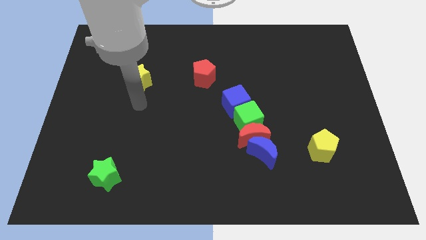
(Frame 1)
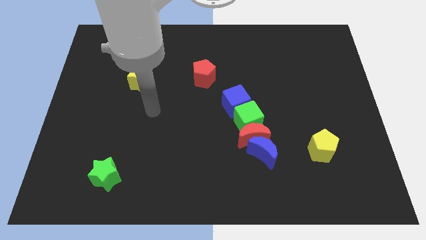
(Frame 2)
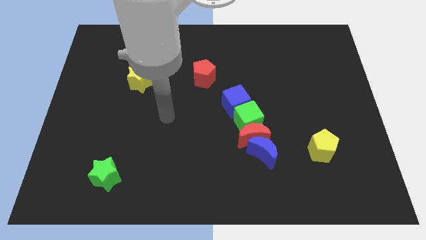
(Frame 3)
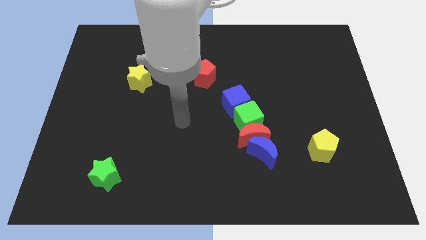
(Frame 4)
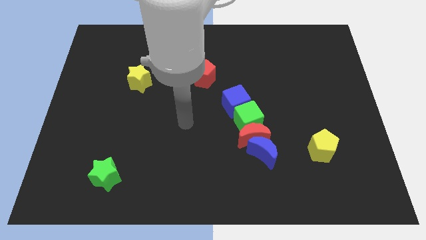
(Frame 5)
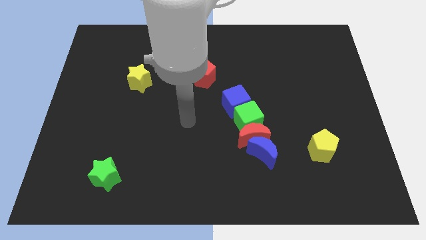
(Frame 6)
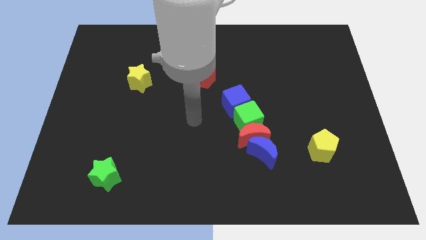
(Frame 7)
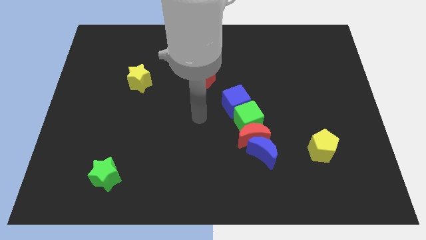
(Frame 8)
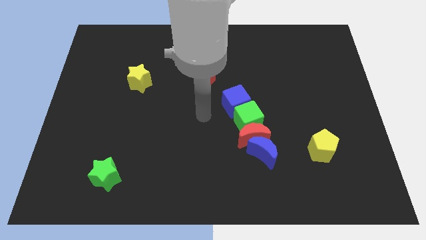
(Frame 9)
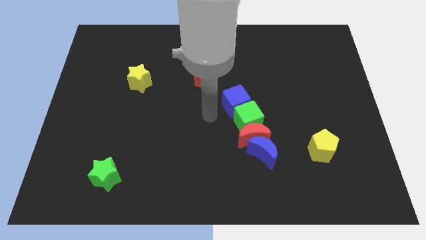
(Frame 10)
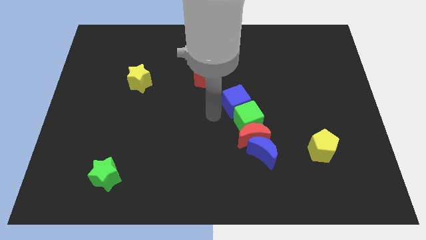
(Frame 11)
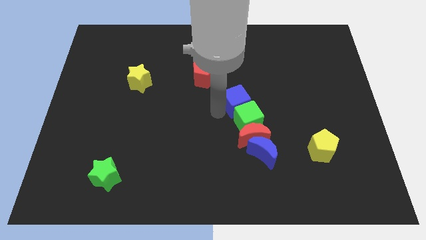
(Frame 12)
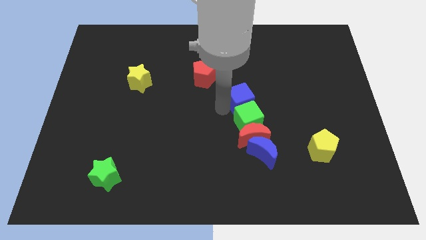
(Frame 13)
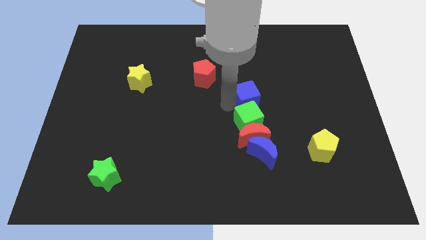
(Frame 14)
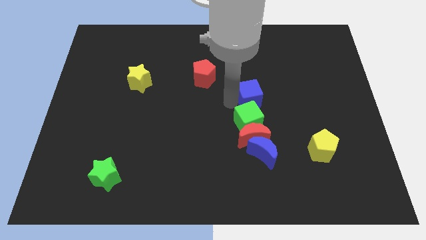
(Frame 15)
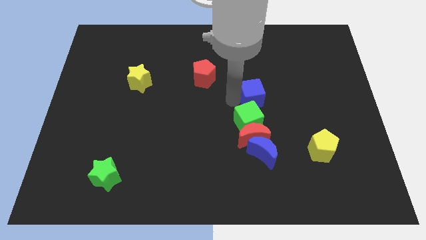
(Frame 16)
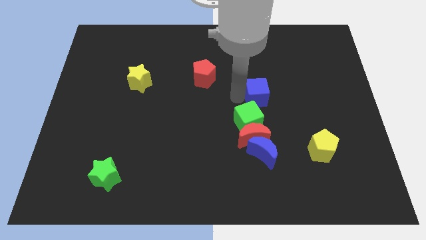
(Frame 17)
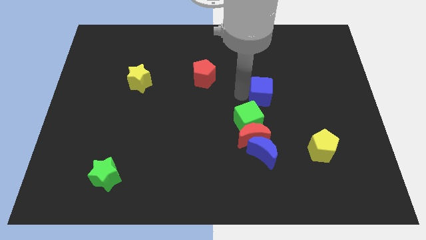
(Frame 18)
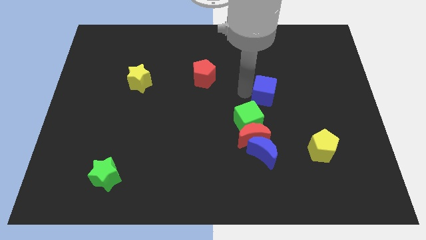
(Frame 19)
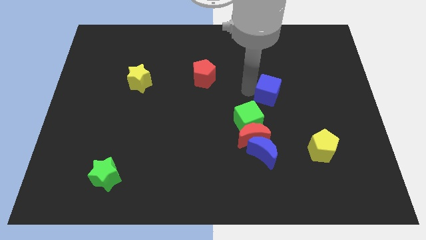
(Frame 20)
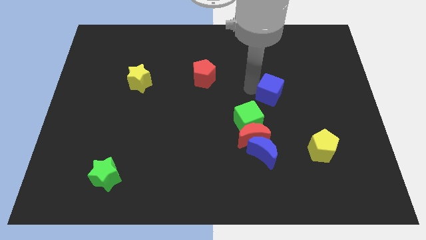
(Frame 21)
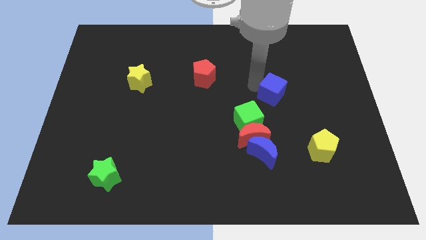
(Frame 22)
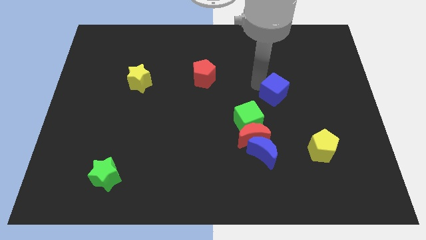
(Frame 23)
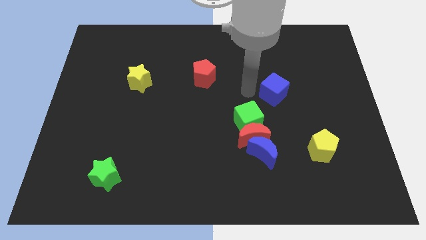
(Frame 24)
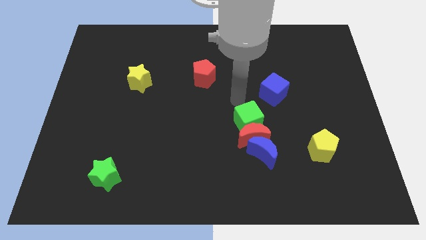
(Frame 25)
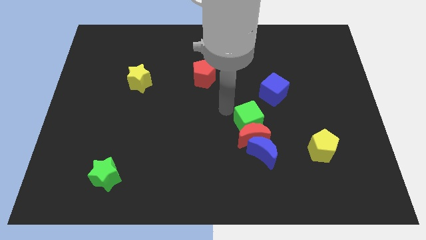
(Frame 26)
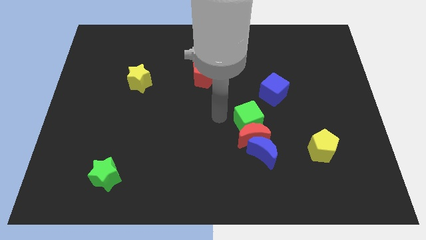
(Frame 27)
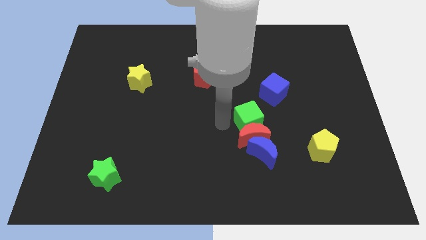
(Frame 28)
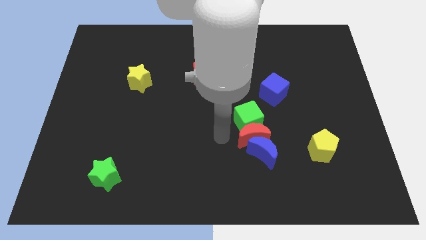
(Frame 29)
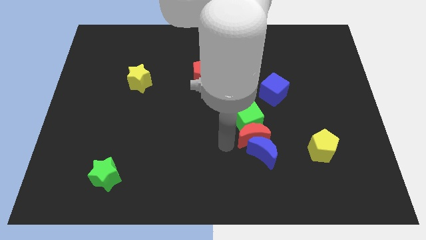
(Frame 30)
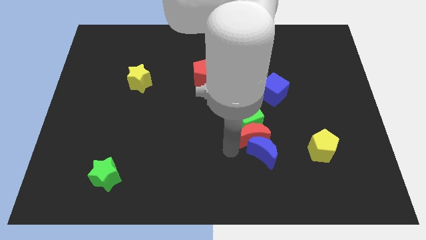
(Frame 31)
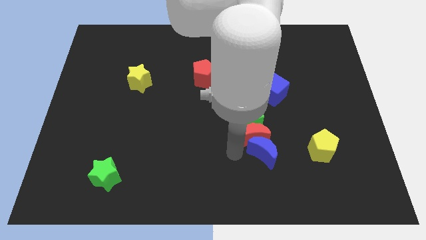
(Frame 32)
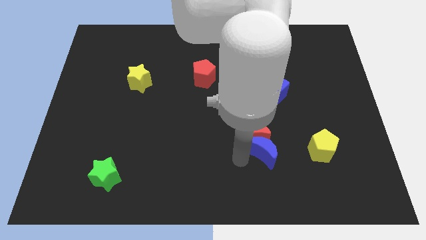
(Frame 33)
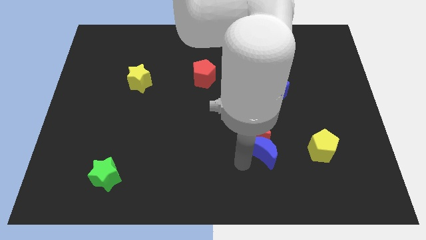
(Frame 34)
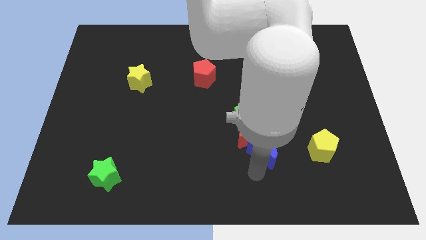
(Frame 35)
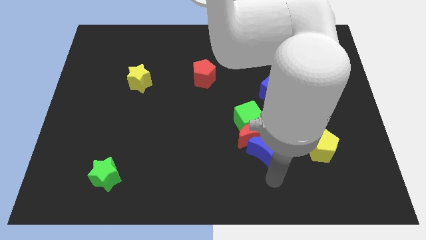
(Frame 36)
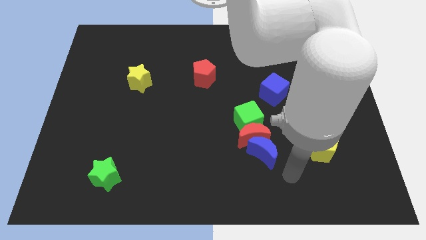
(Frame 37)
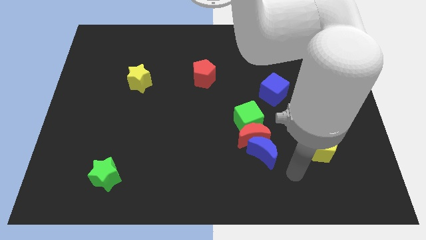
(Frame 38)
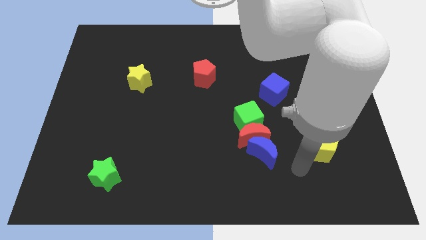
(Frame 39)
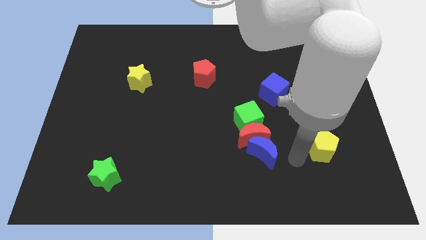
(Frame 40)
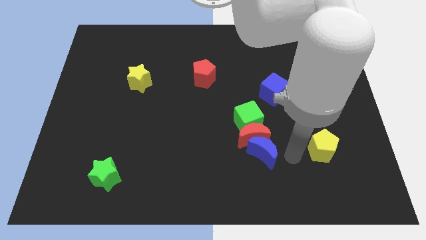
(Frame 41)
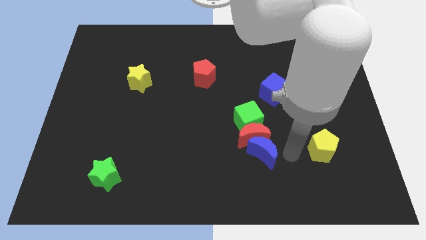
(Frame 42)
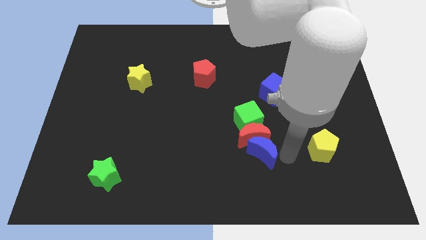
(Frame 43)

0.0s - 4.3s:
separate blue cube from the group of blocks

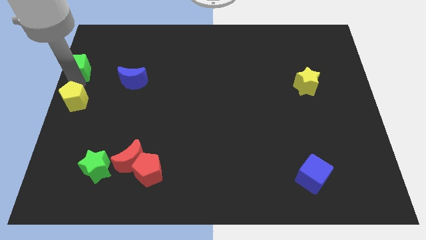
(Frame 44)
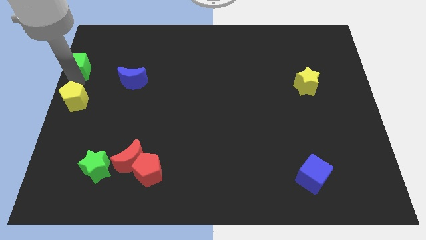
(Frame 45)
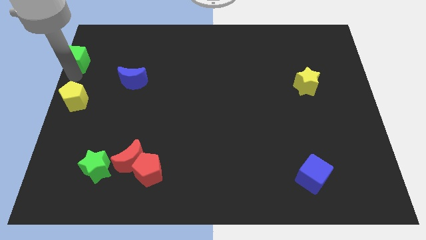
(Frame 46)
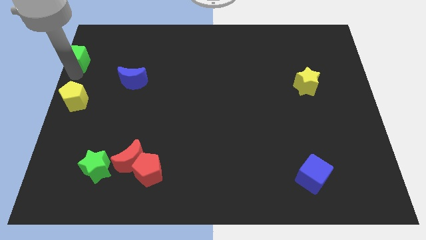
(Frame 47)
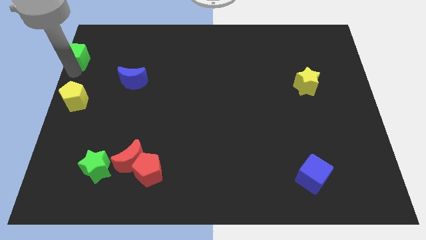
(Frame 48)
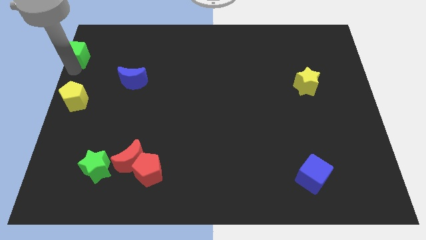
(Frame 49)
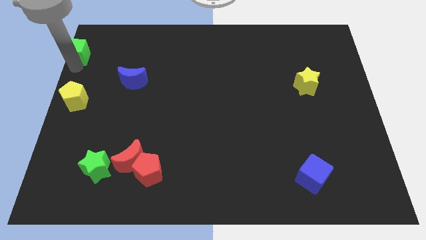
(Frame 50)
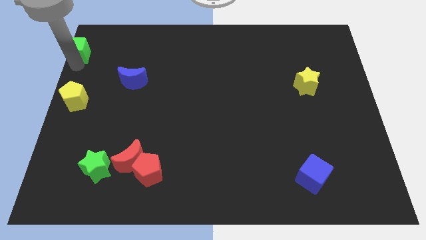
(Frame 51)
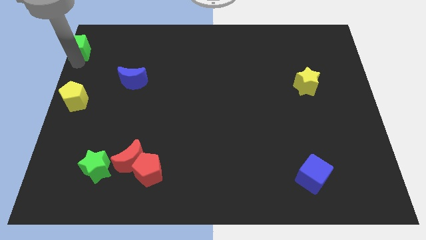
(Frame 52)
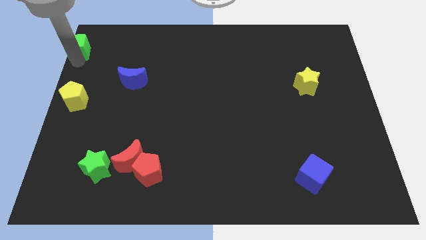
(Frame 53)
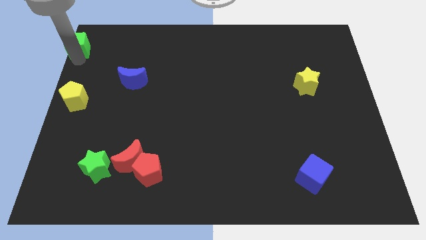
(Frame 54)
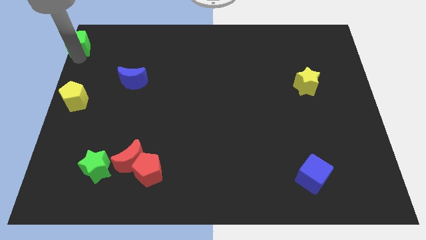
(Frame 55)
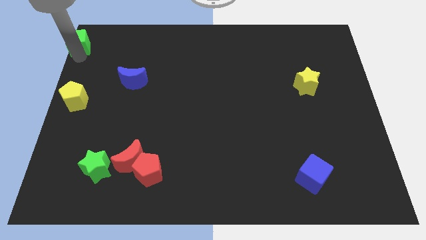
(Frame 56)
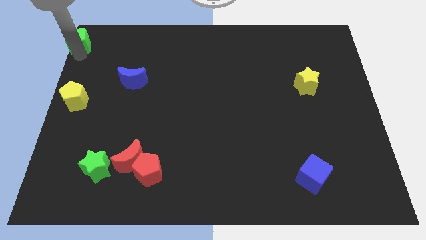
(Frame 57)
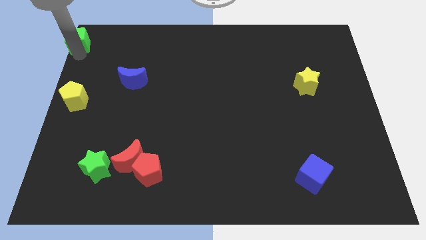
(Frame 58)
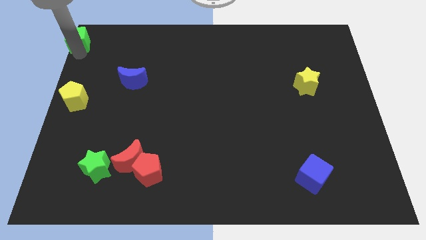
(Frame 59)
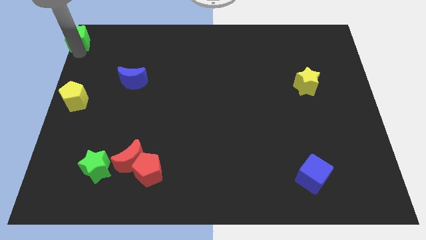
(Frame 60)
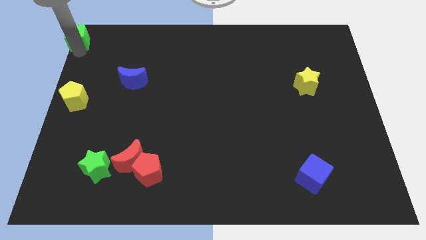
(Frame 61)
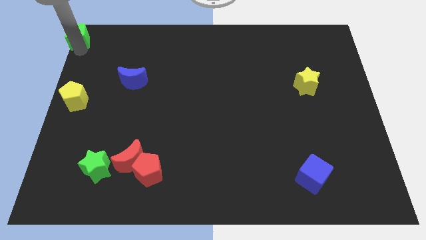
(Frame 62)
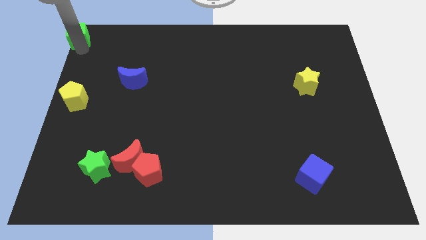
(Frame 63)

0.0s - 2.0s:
move the green cube to the top left corner

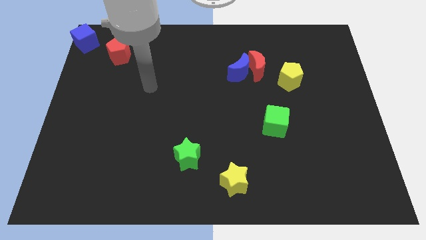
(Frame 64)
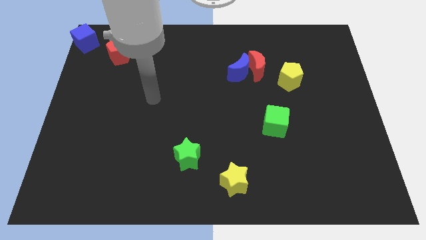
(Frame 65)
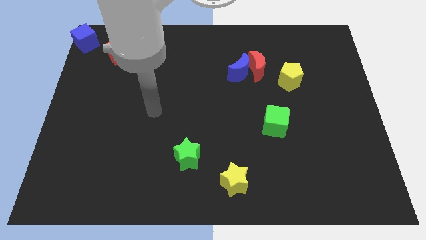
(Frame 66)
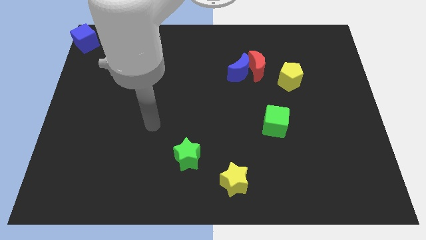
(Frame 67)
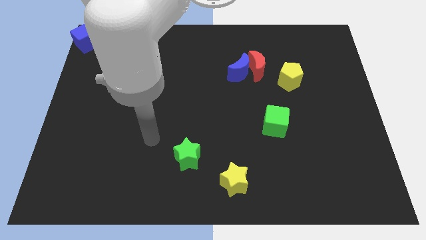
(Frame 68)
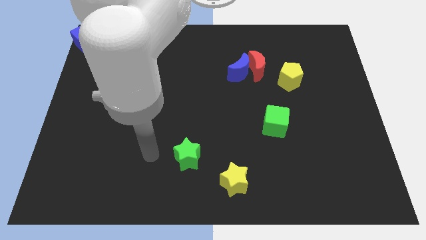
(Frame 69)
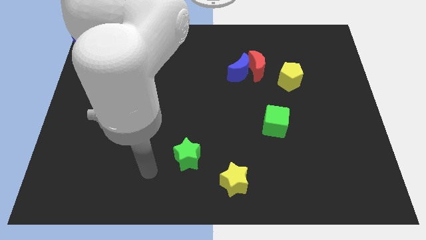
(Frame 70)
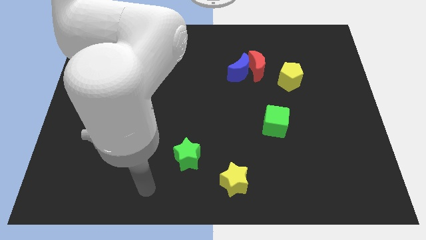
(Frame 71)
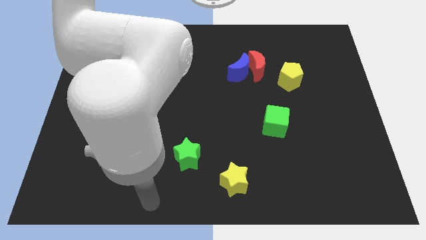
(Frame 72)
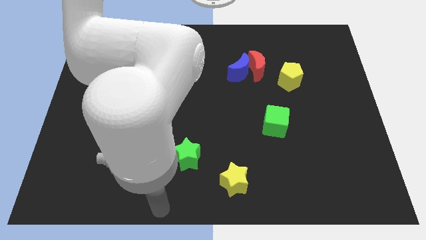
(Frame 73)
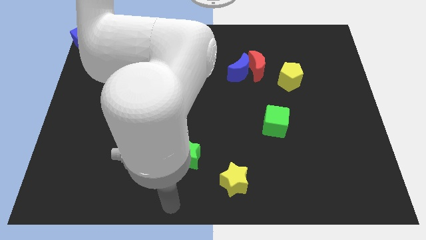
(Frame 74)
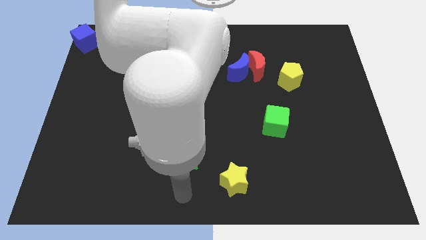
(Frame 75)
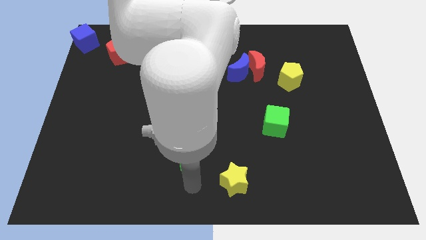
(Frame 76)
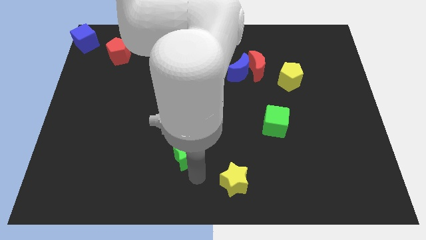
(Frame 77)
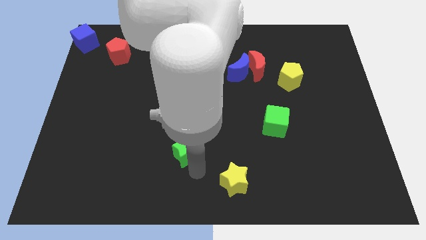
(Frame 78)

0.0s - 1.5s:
touch the bottom side of the green star

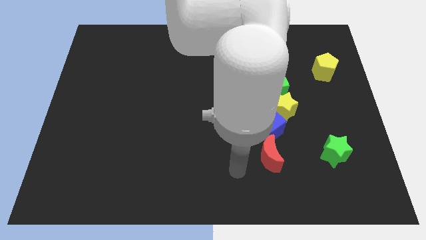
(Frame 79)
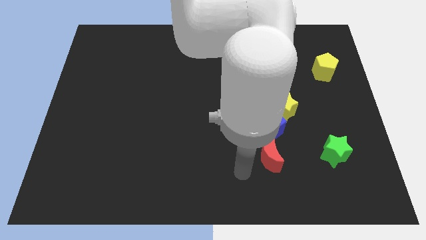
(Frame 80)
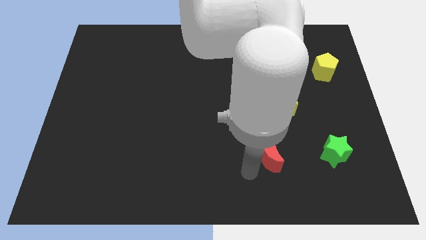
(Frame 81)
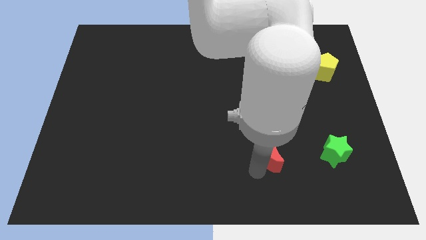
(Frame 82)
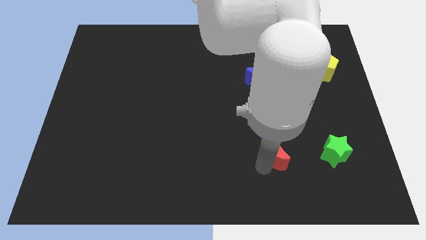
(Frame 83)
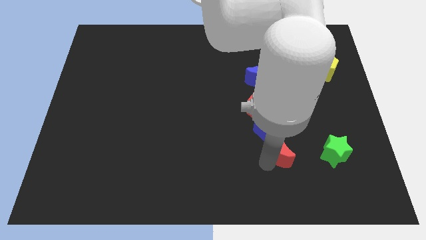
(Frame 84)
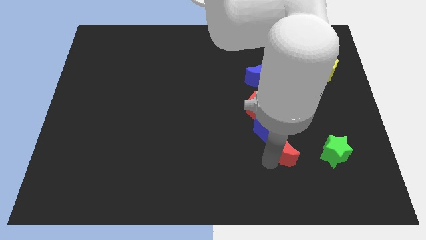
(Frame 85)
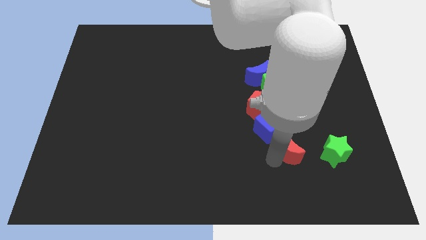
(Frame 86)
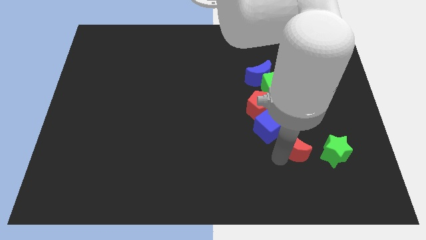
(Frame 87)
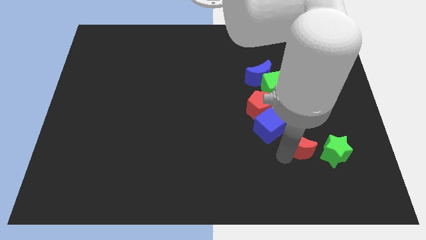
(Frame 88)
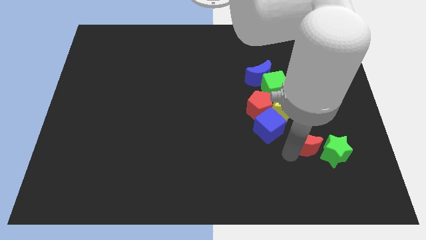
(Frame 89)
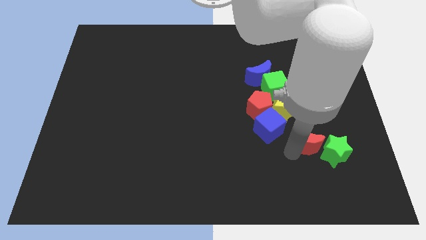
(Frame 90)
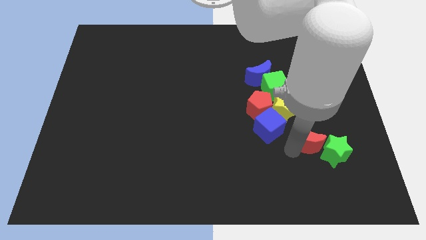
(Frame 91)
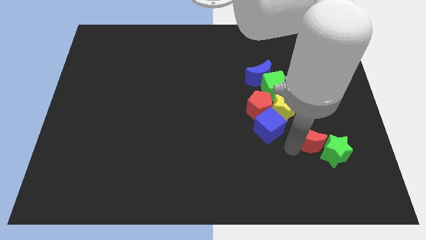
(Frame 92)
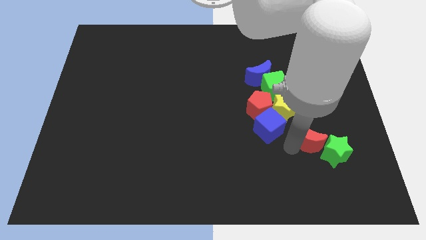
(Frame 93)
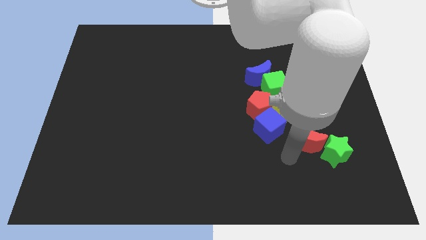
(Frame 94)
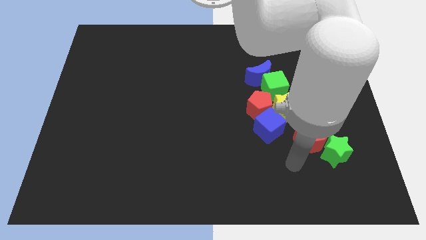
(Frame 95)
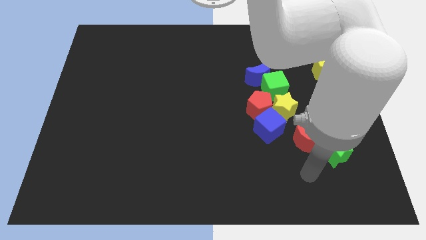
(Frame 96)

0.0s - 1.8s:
put red moon and green star together
